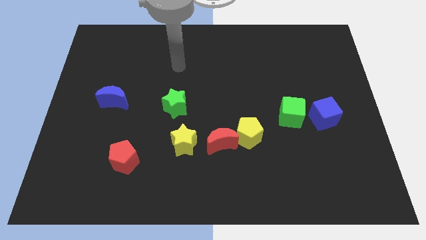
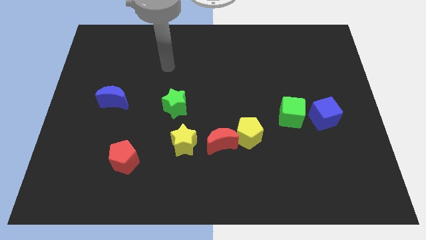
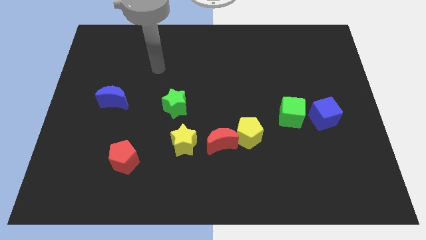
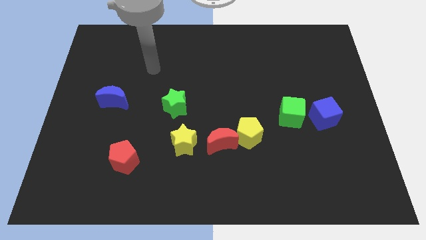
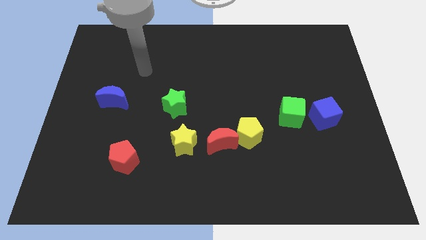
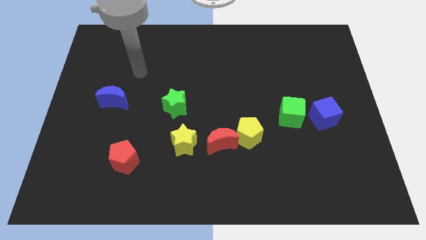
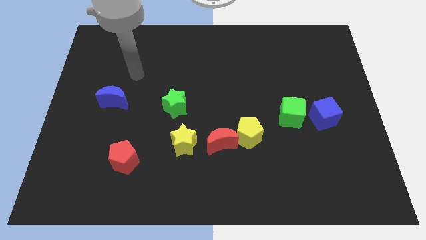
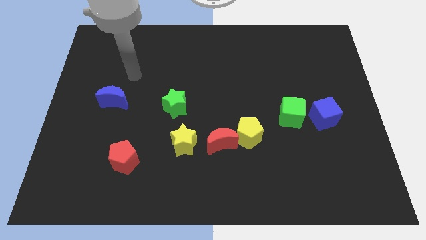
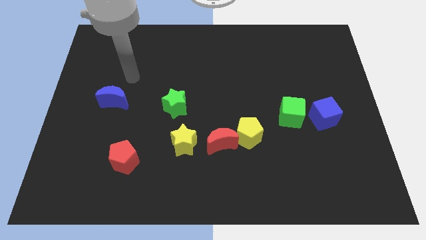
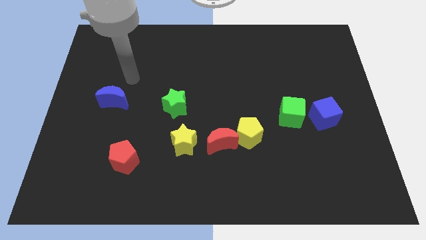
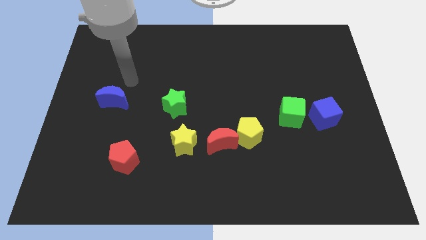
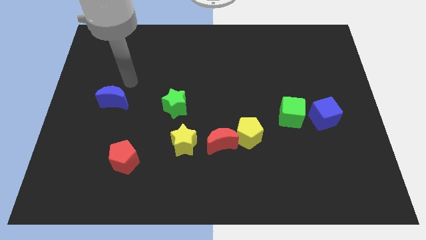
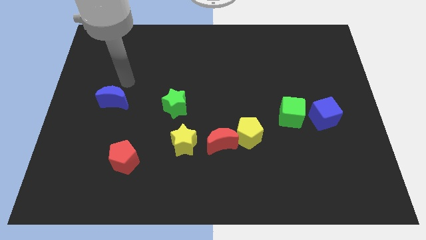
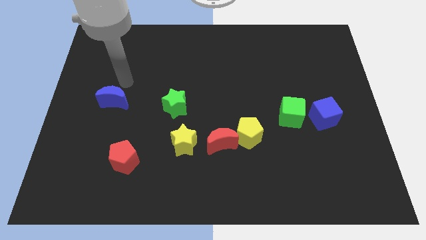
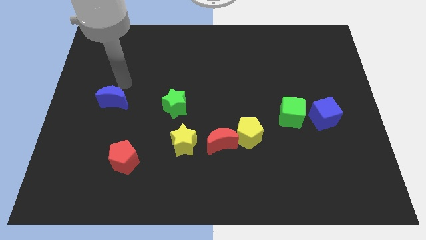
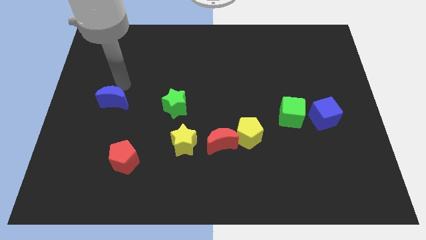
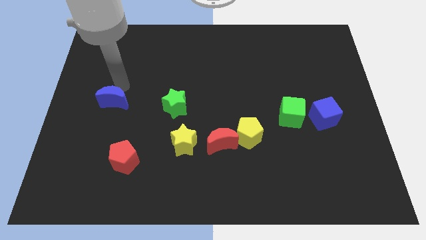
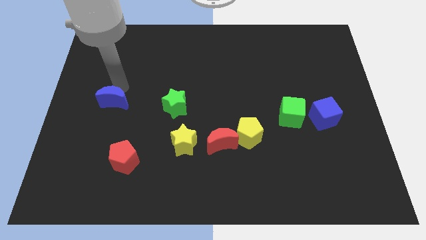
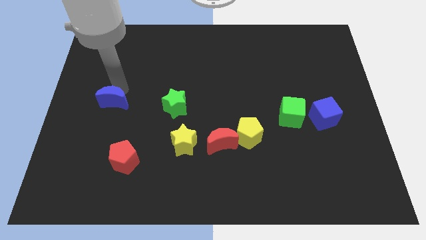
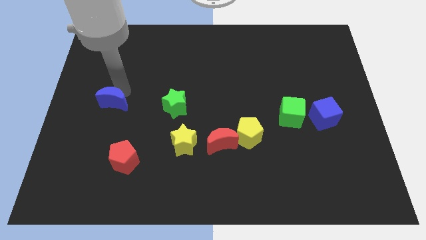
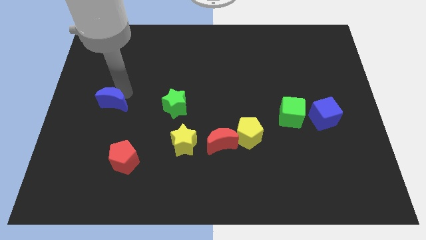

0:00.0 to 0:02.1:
tap on top right side of blue moon

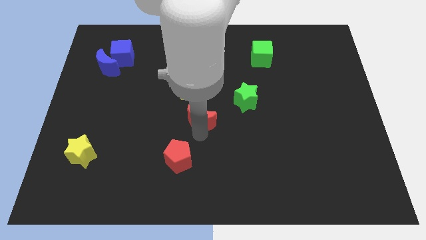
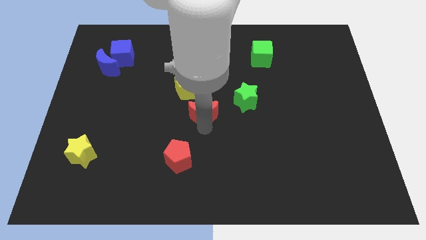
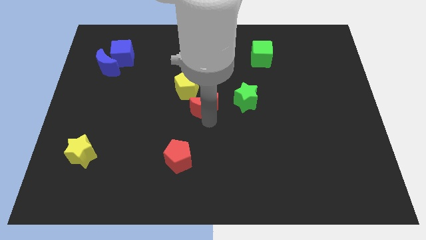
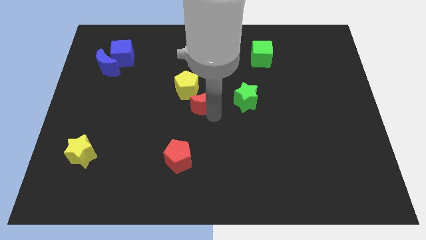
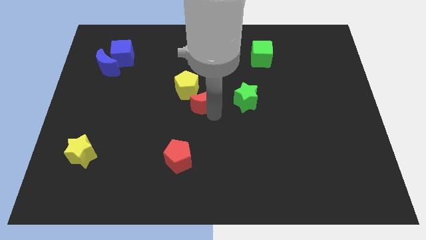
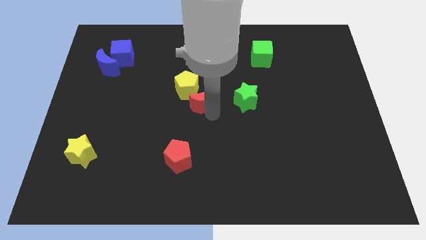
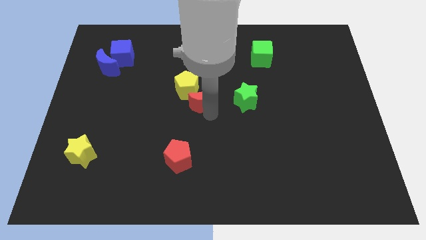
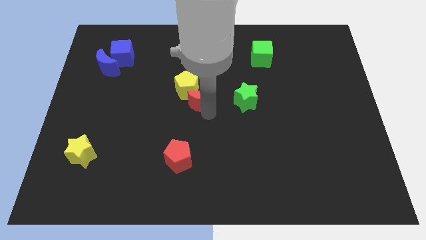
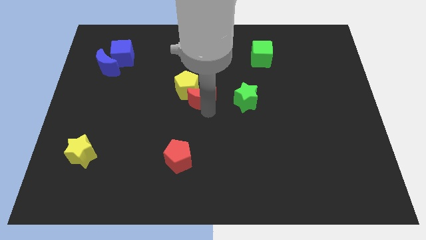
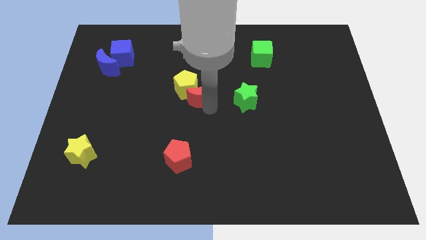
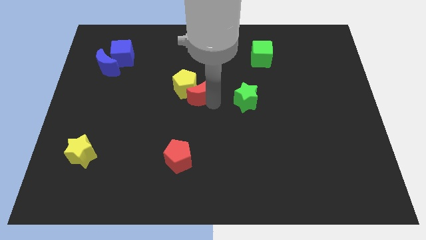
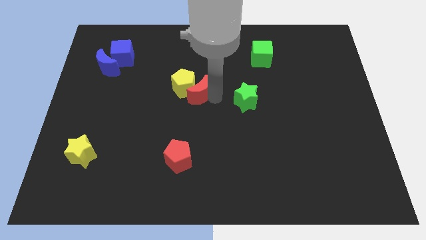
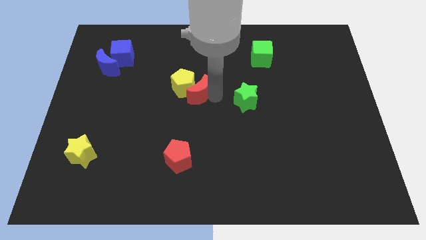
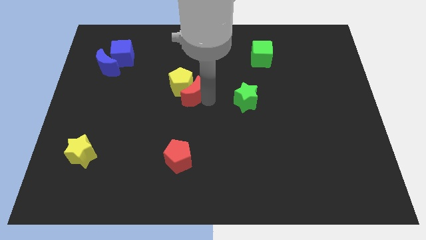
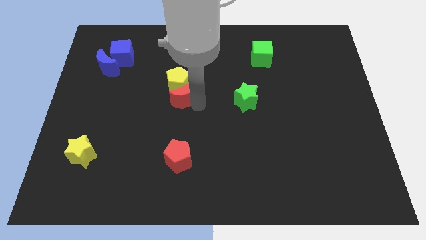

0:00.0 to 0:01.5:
move the red crescent into the yellow pentagon

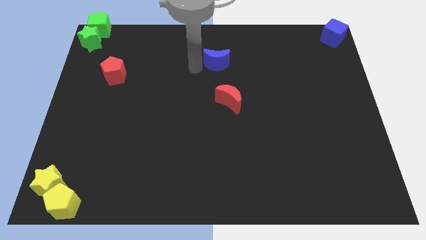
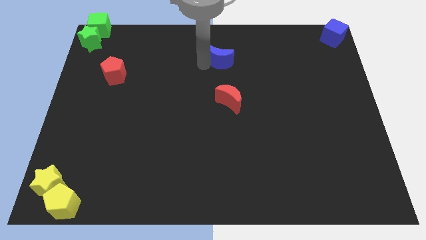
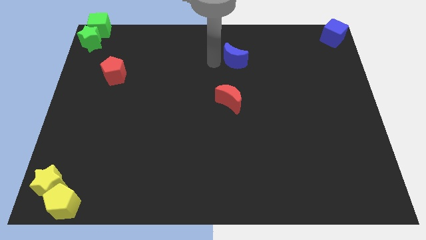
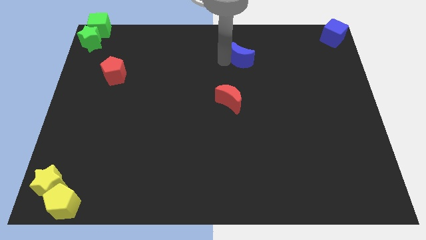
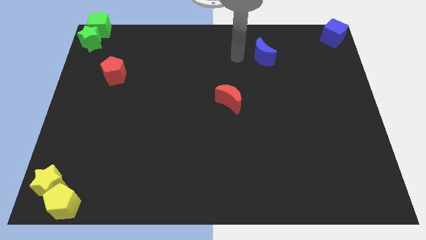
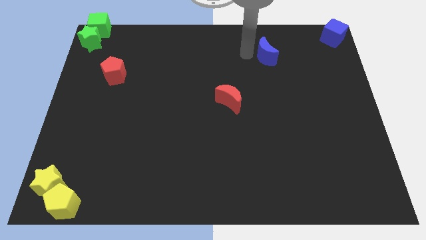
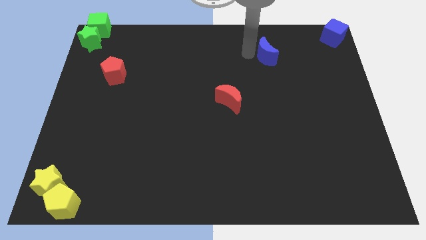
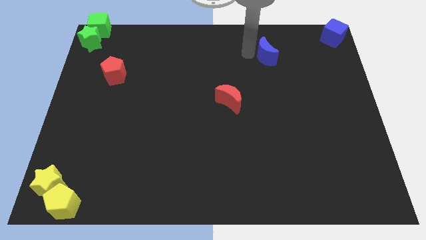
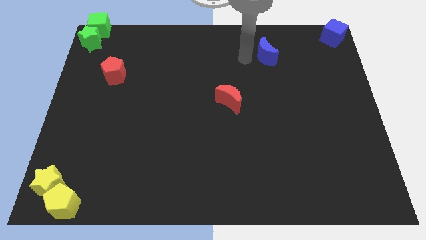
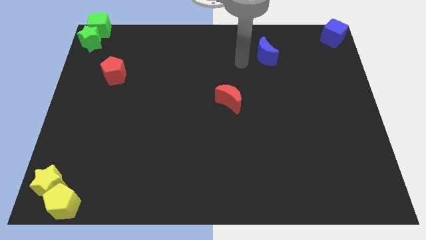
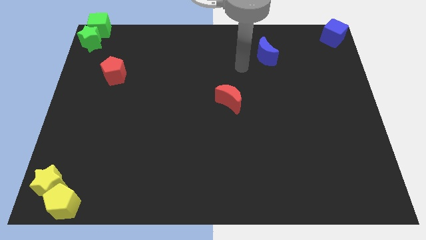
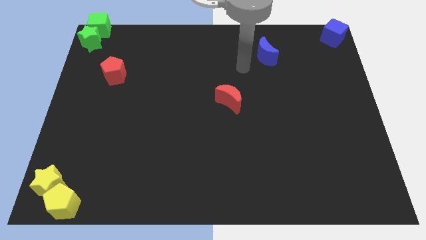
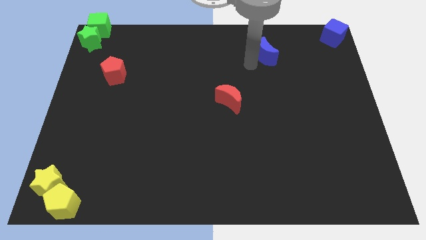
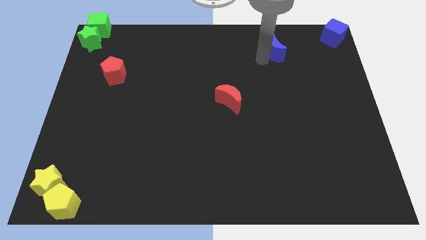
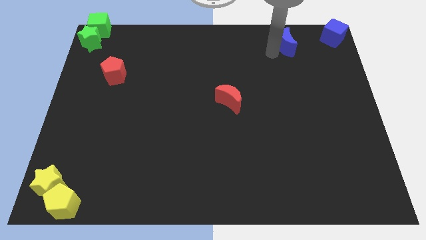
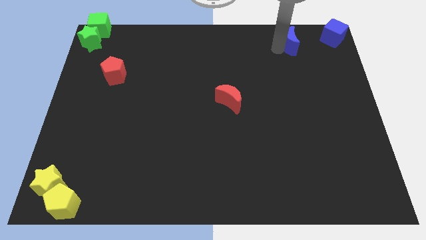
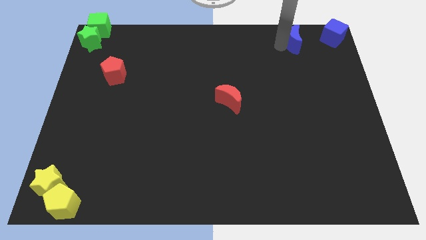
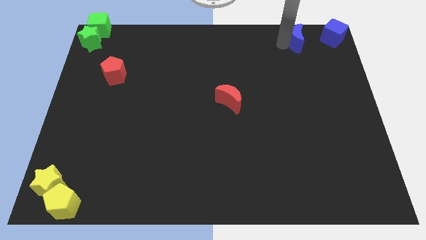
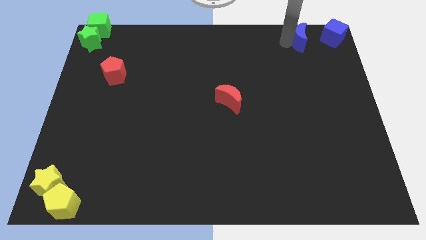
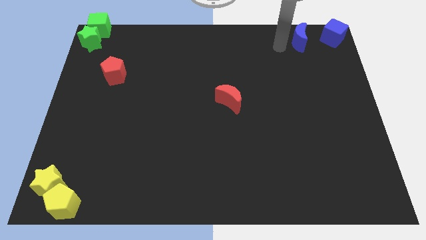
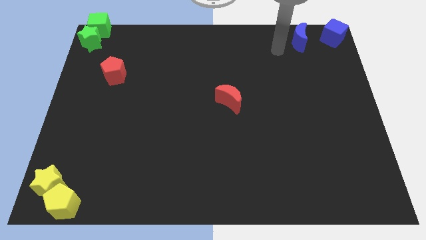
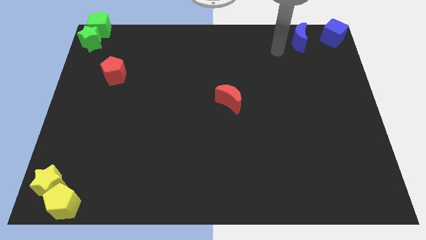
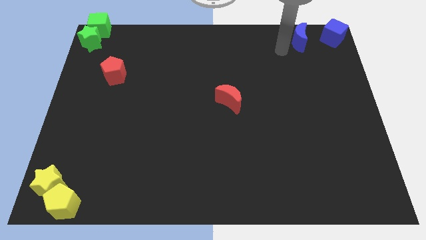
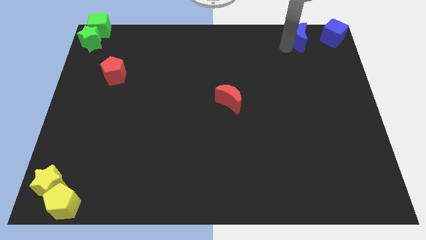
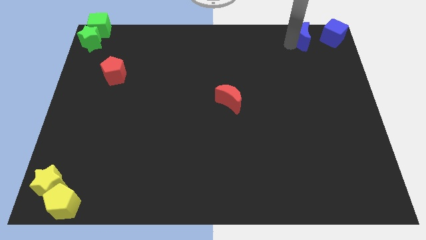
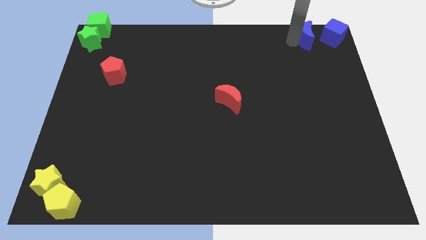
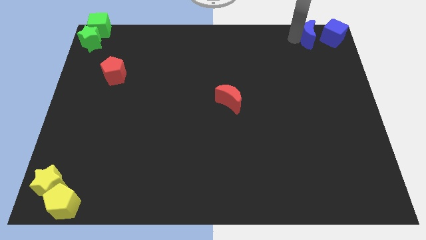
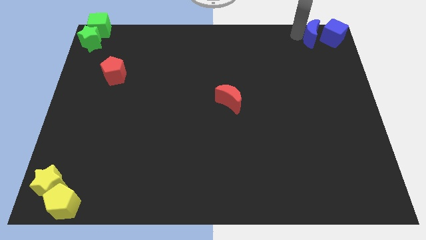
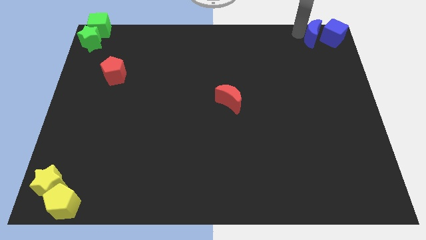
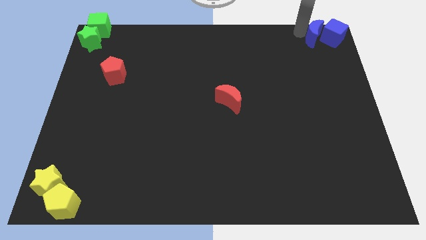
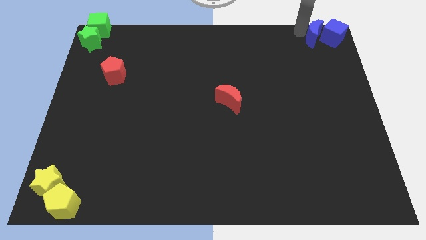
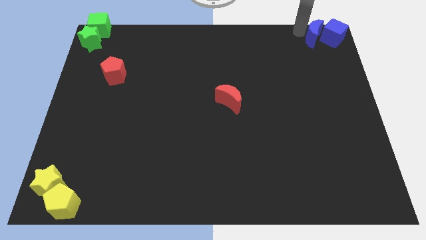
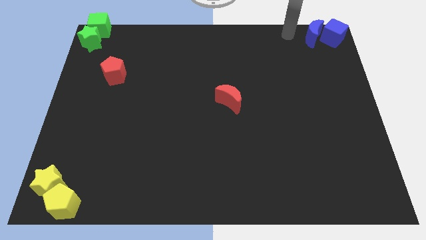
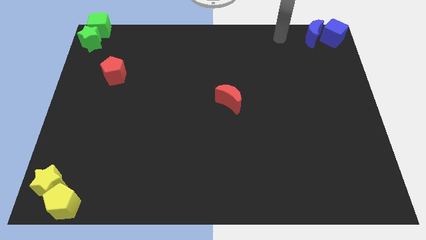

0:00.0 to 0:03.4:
place the blue moon to the left of blue cube

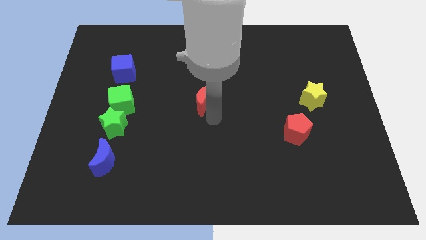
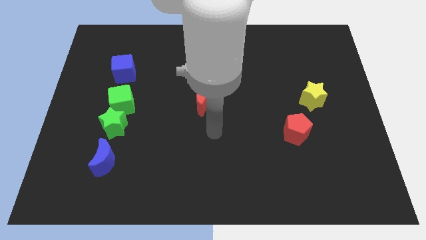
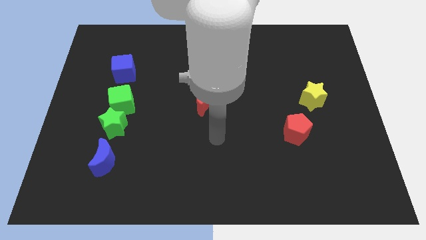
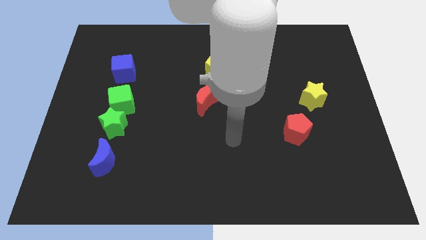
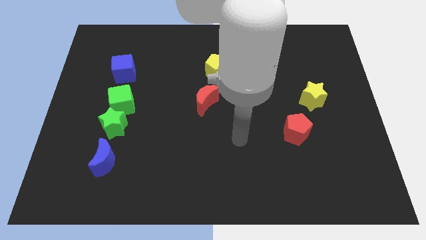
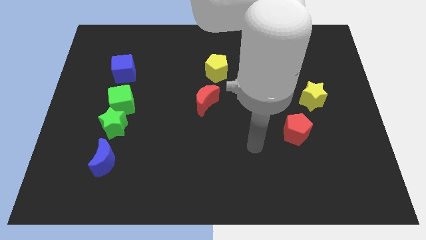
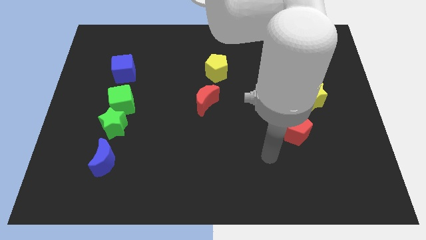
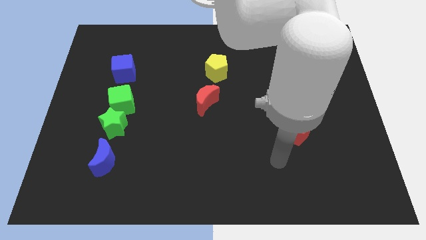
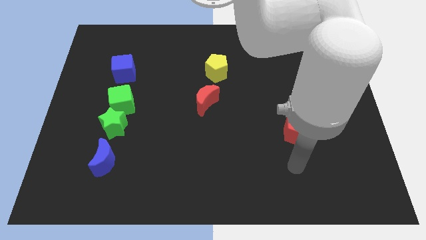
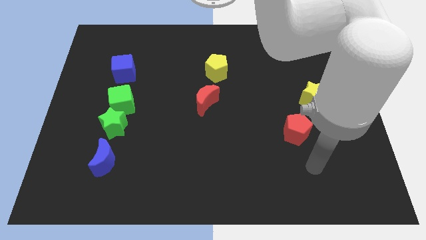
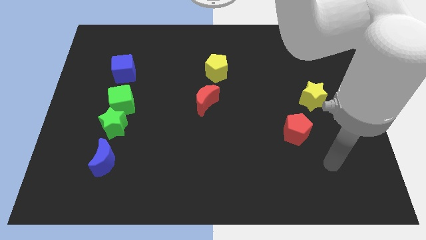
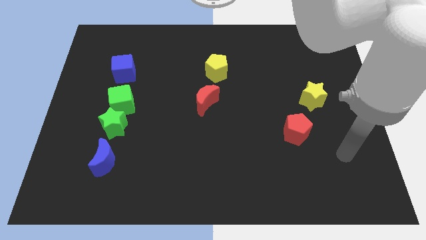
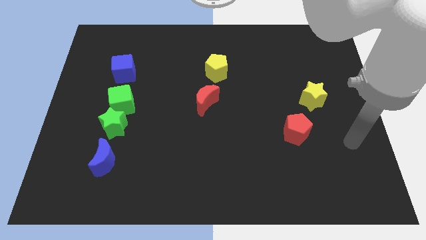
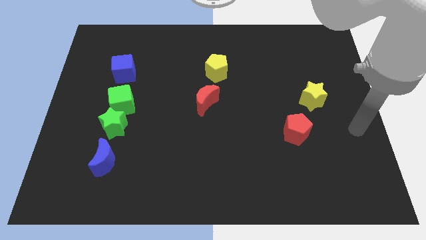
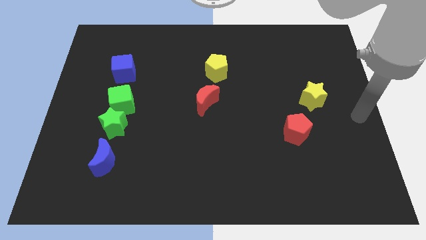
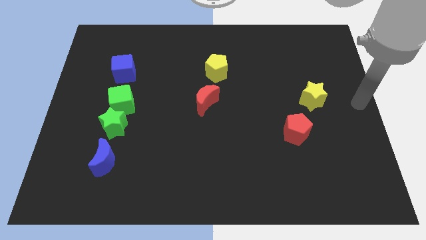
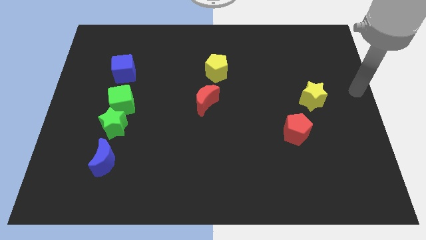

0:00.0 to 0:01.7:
move the arm to the right center of the board

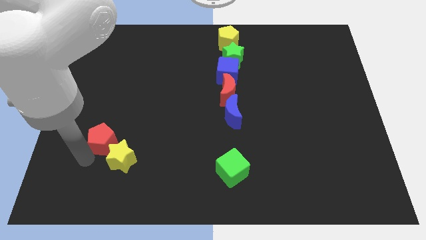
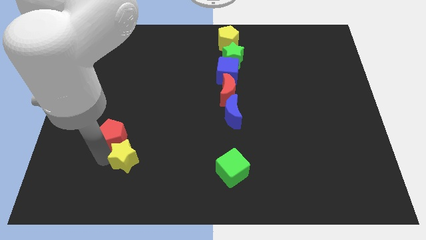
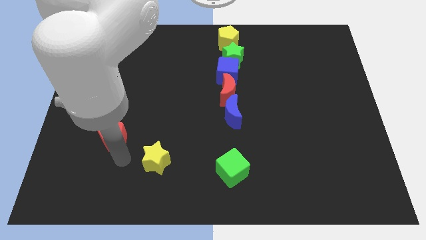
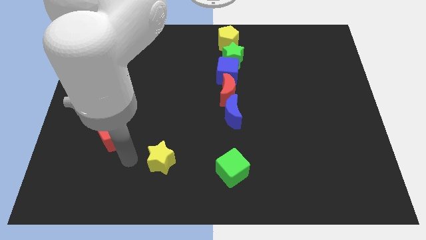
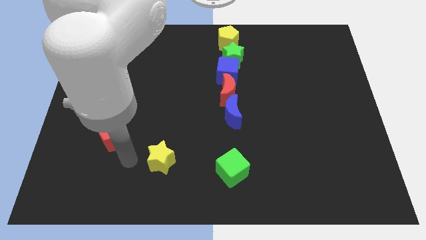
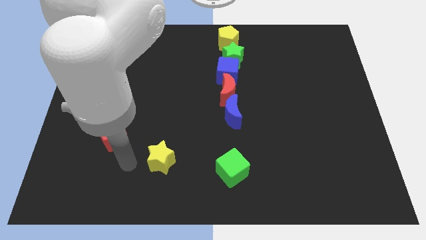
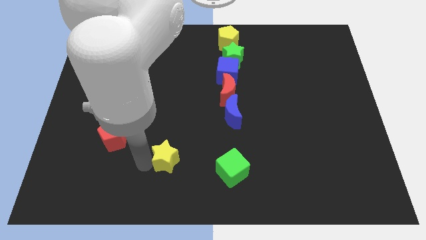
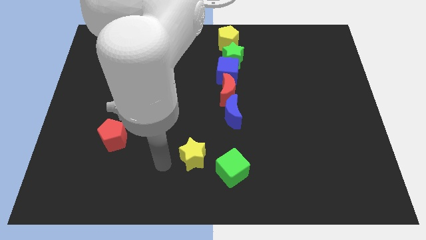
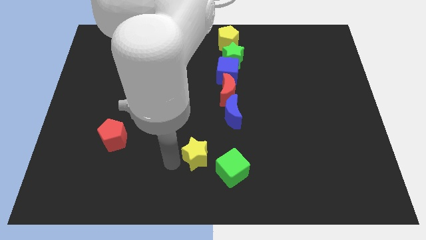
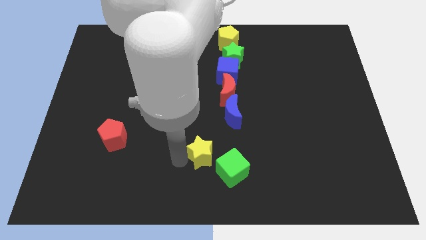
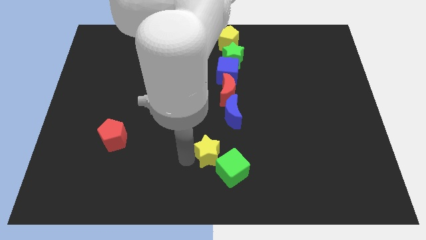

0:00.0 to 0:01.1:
separate the yellow star and the red pentagon
